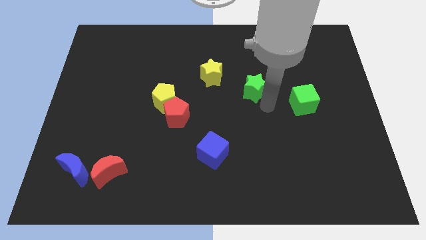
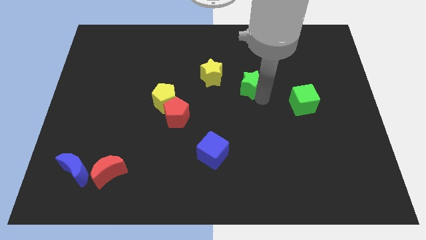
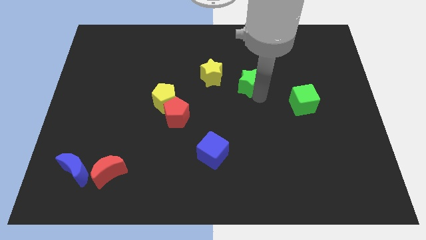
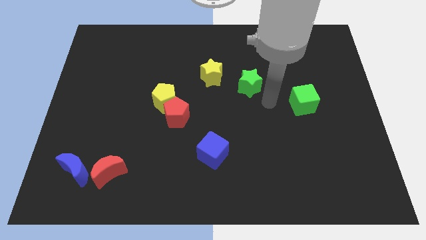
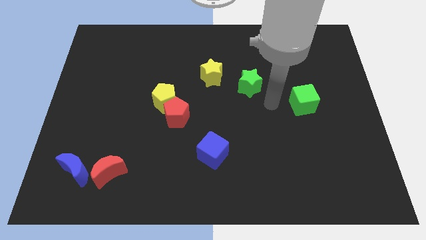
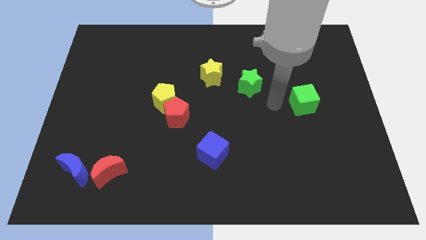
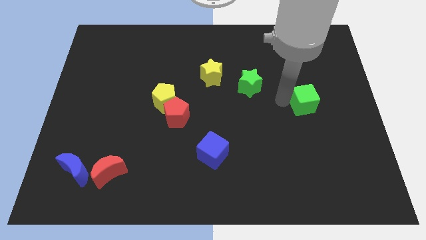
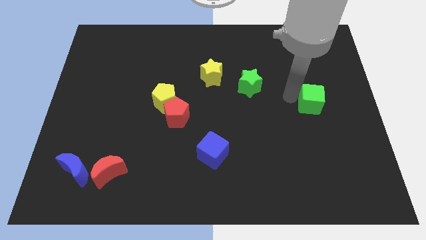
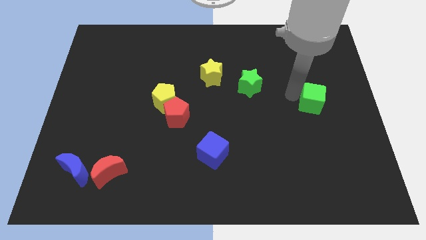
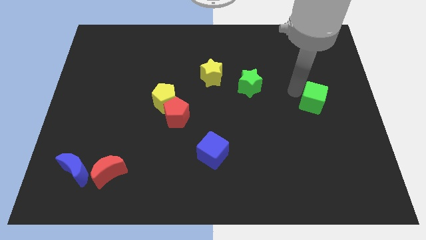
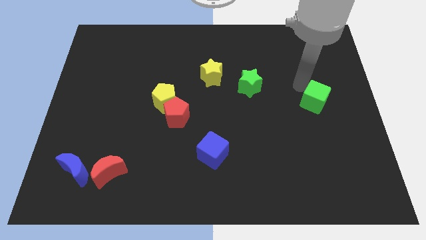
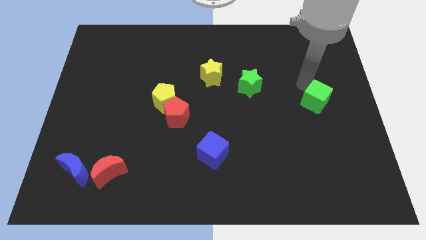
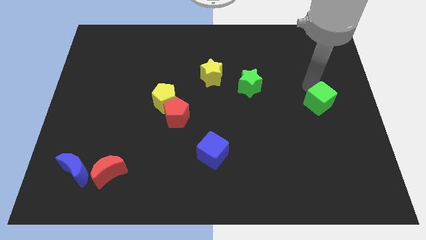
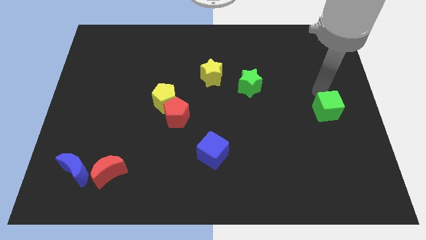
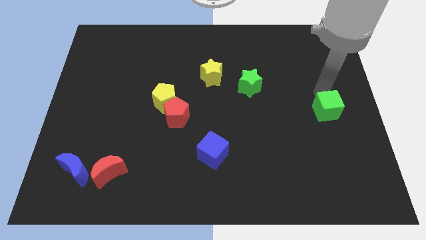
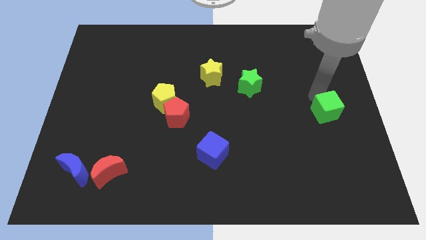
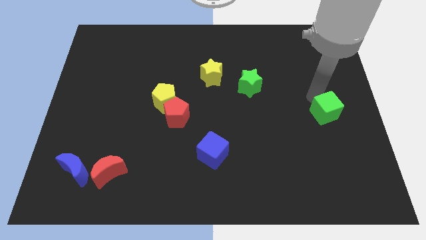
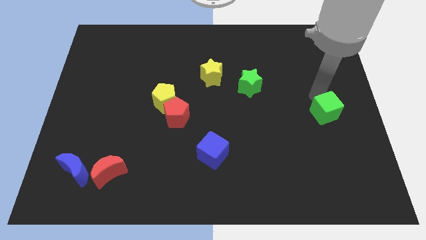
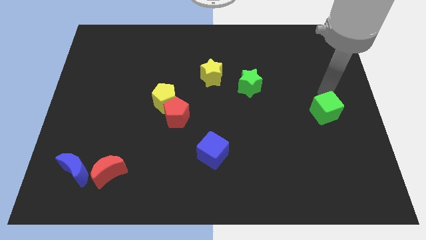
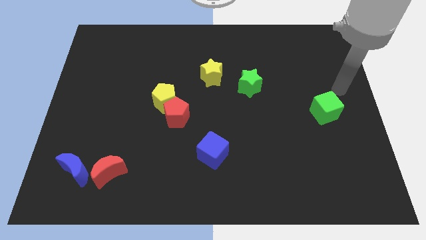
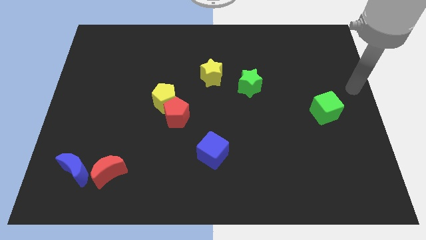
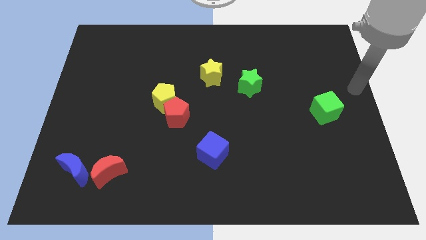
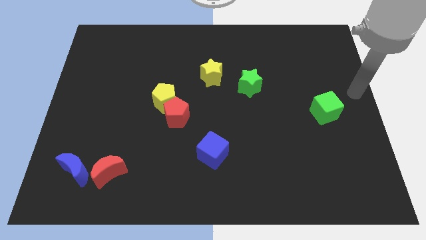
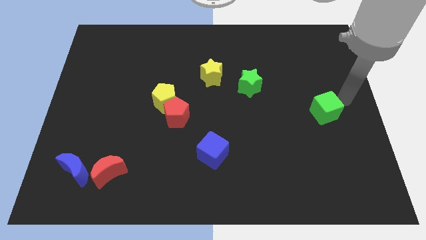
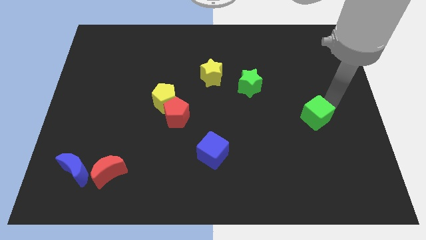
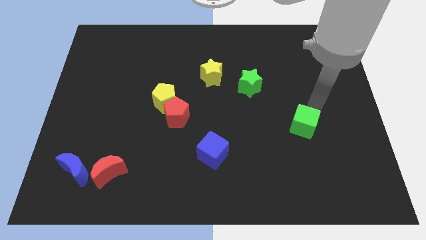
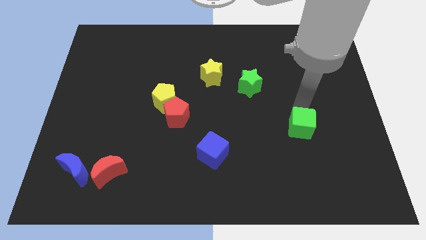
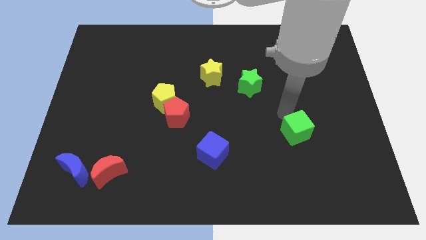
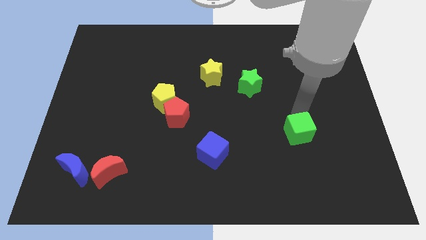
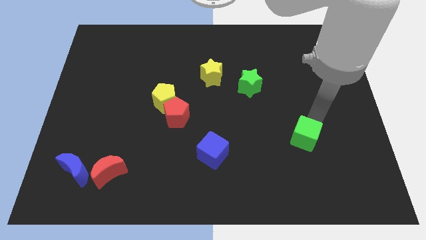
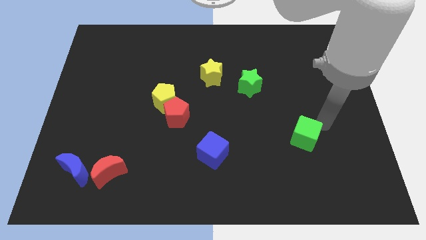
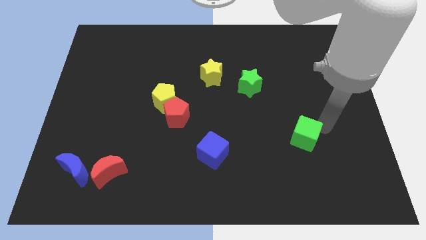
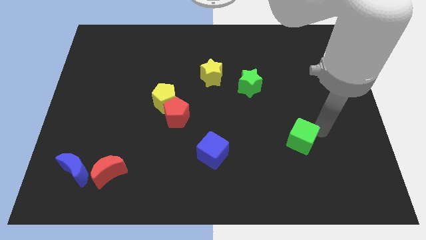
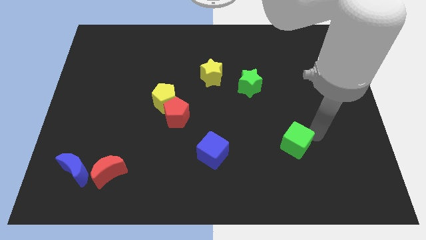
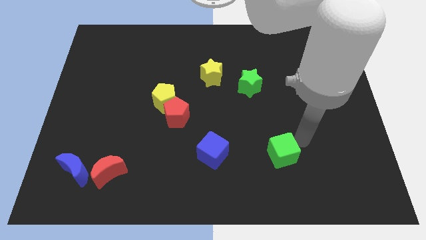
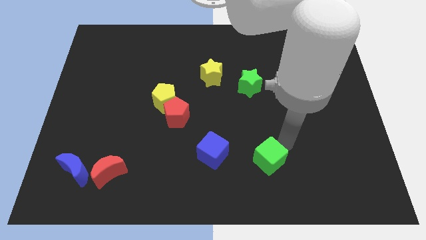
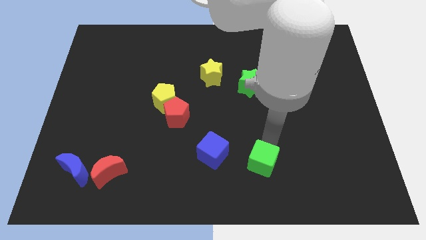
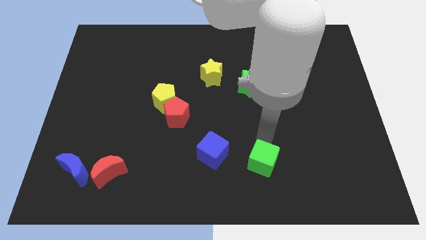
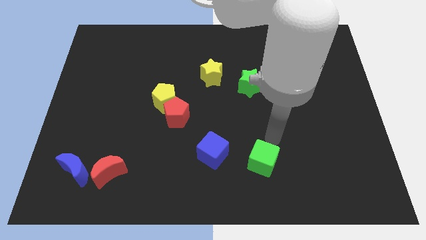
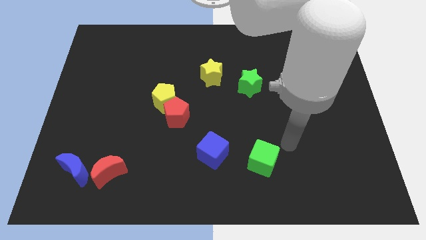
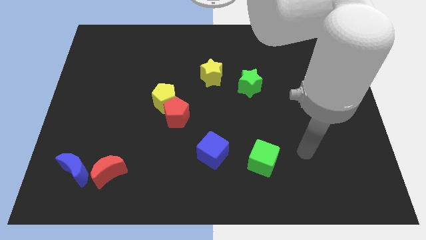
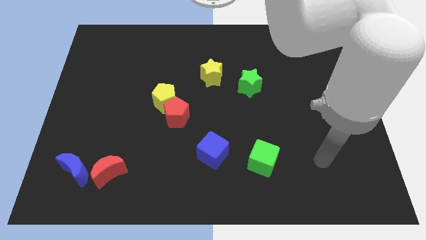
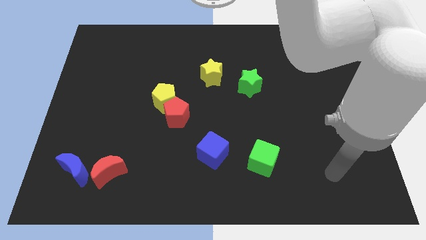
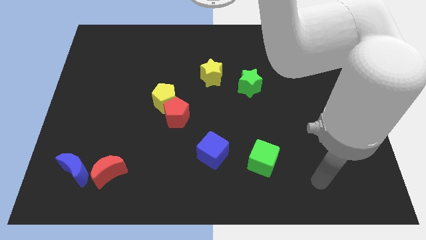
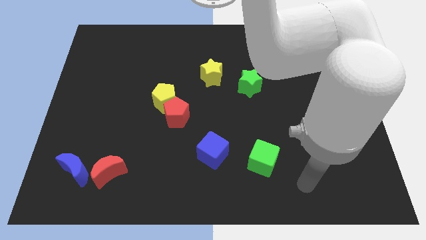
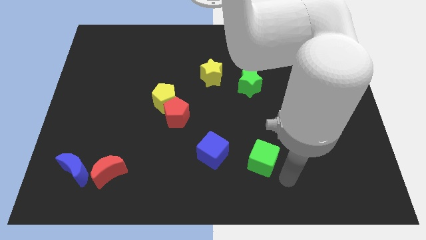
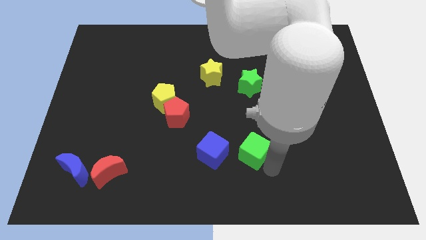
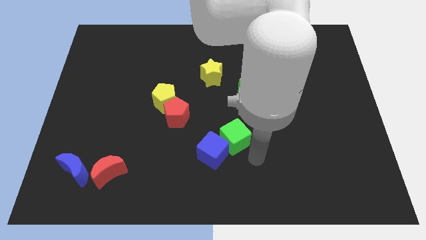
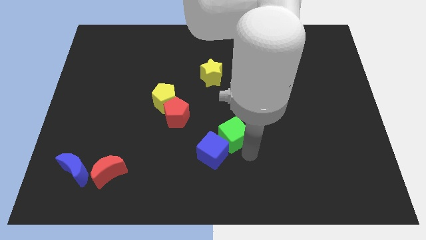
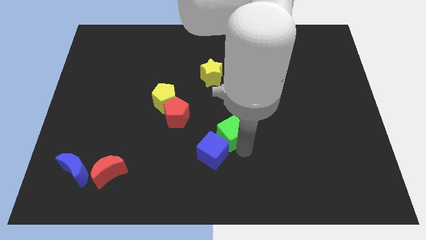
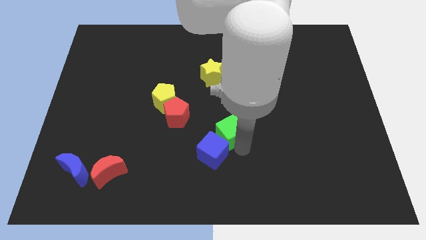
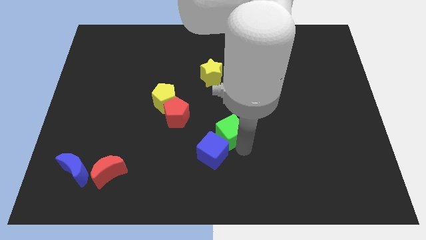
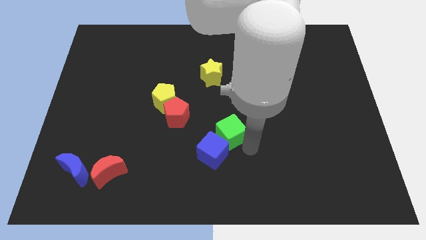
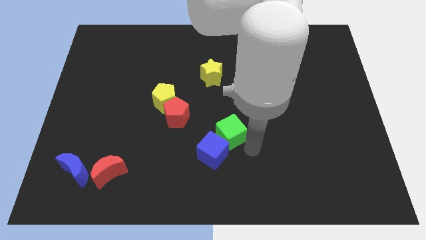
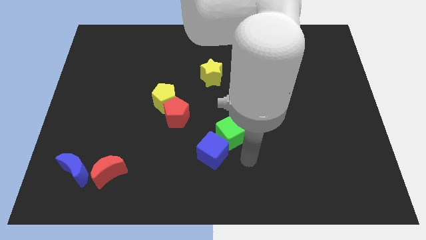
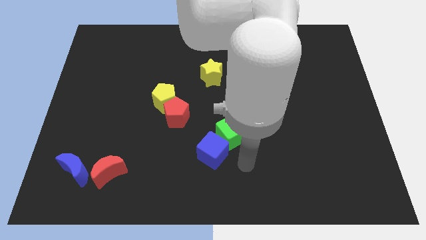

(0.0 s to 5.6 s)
slide the green cube at the top right side of the blue cube

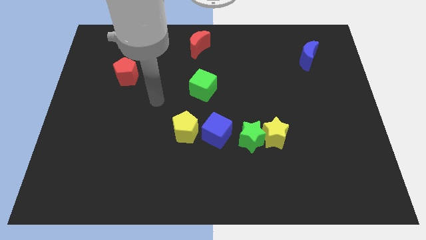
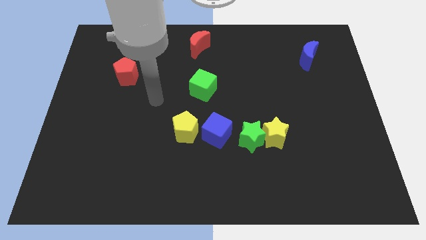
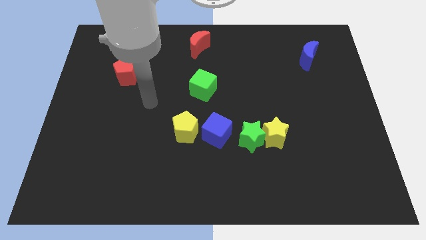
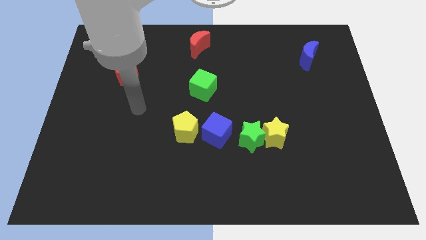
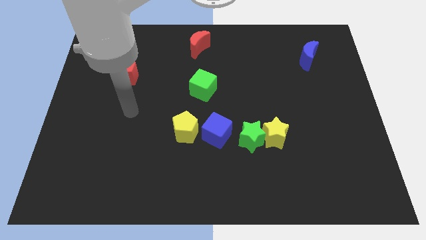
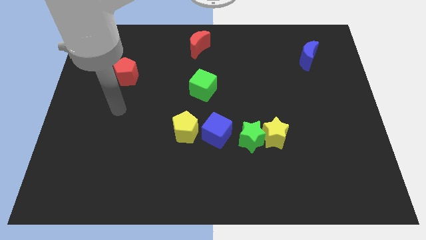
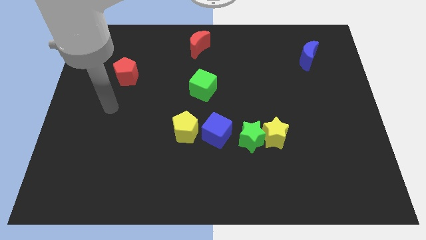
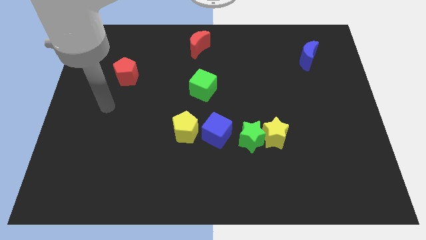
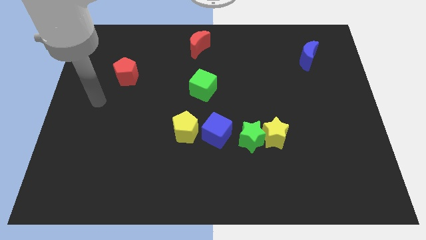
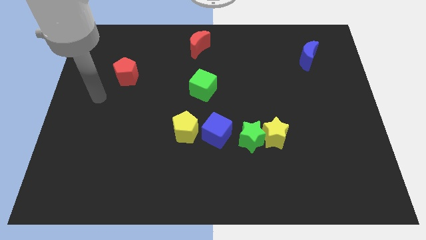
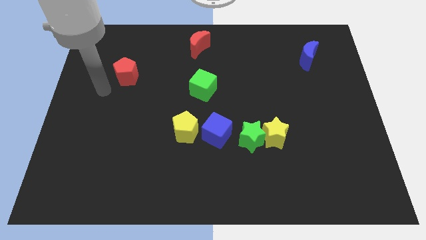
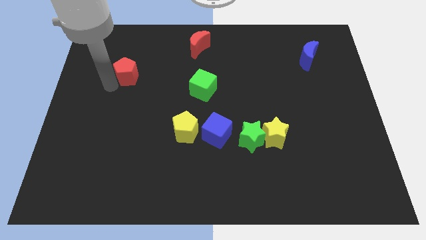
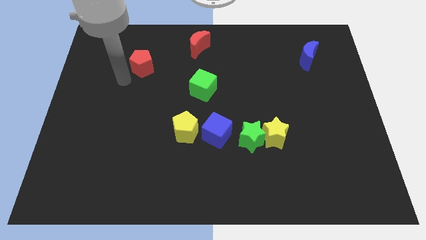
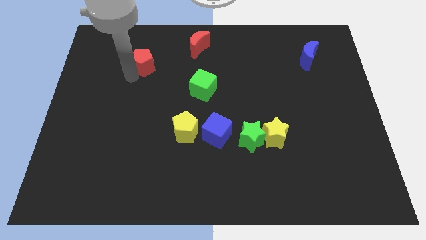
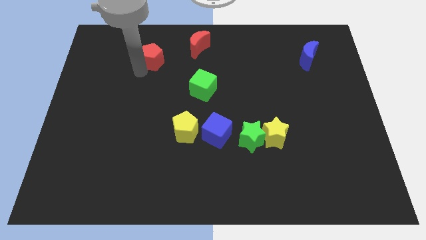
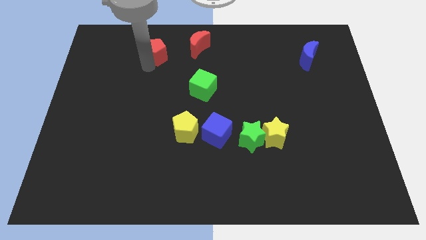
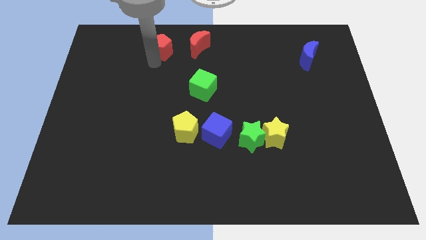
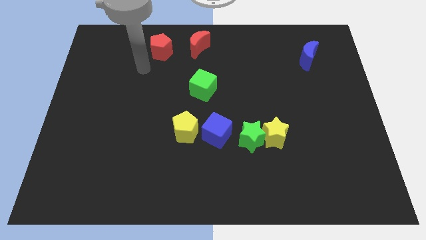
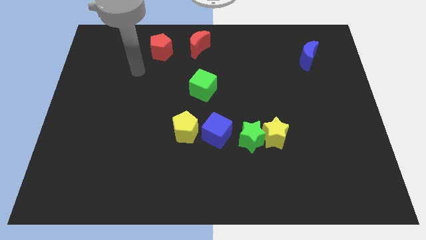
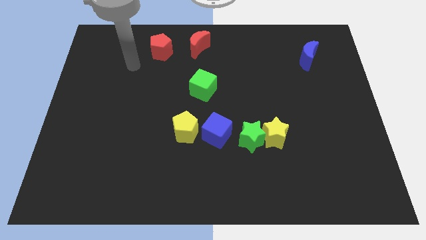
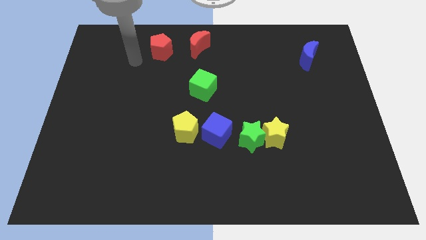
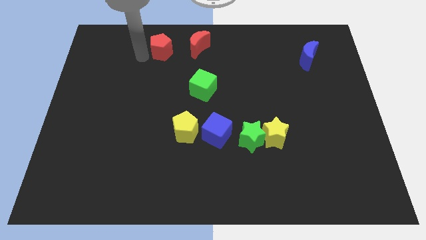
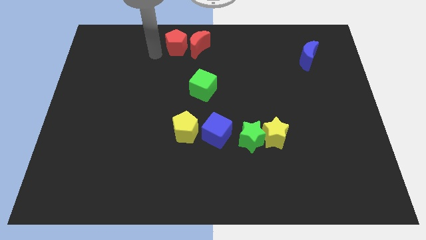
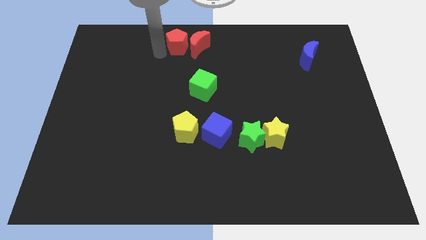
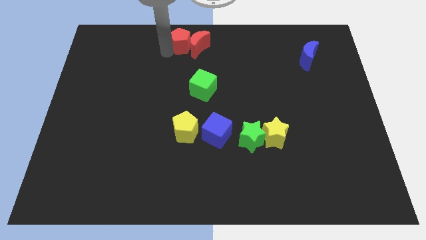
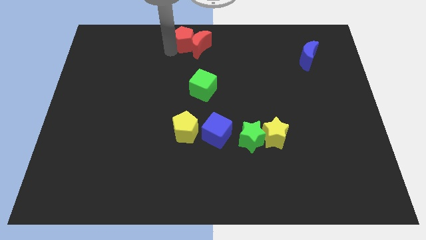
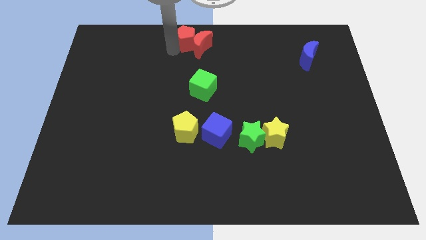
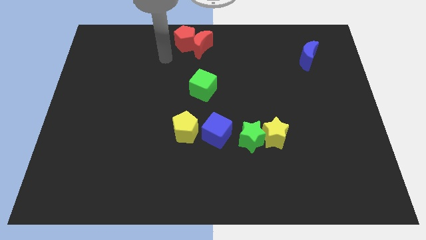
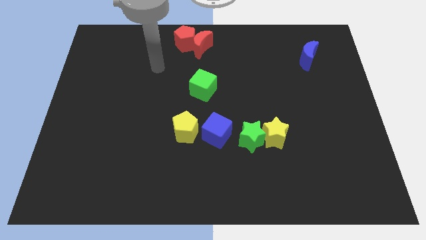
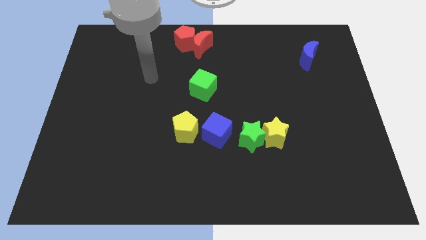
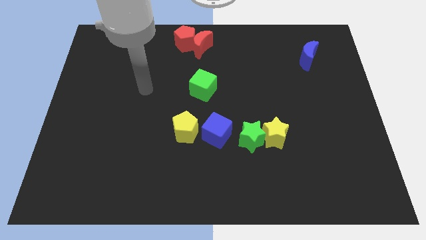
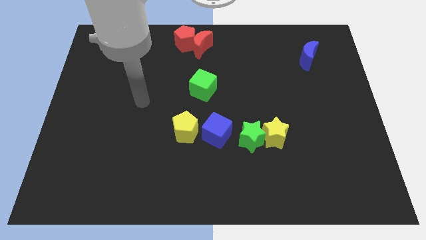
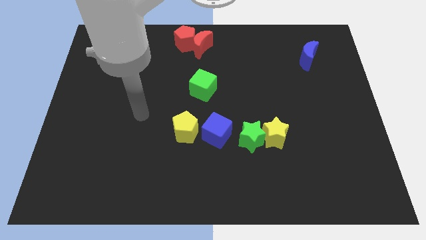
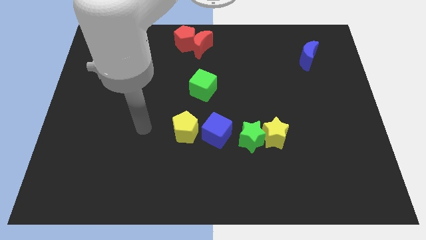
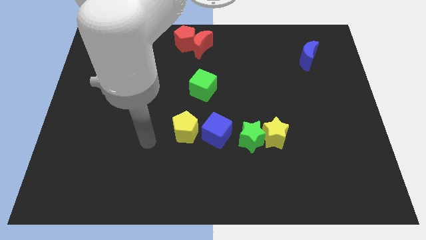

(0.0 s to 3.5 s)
push red pentagon in to red crescent
